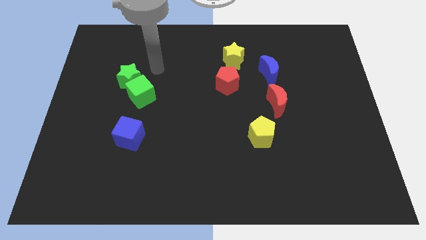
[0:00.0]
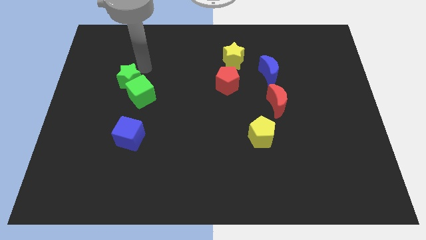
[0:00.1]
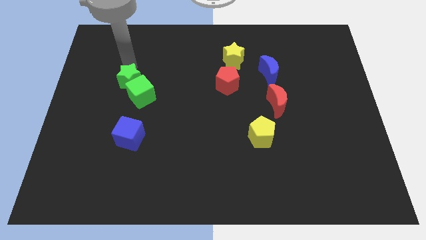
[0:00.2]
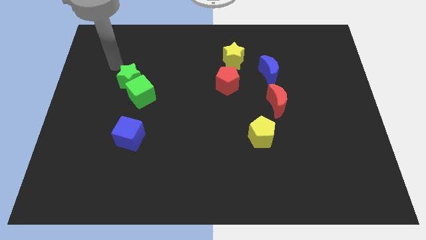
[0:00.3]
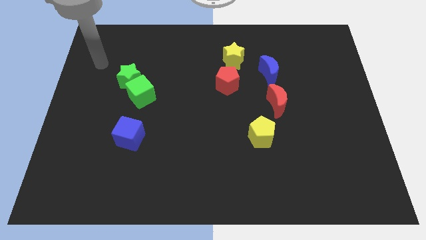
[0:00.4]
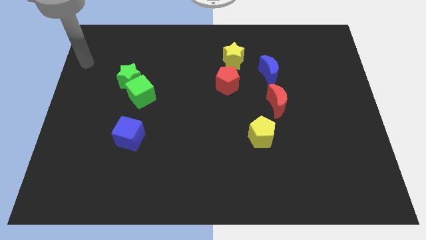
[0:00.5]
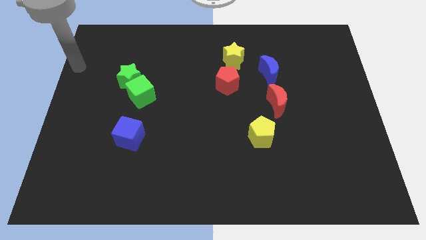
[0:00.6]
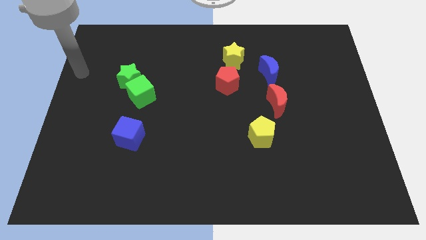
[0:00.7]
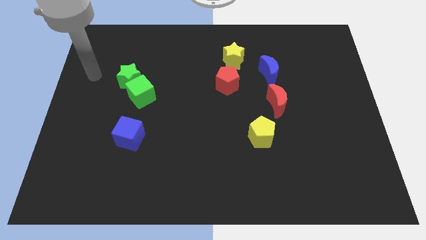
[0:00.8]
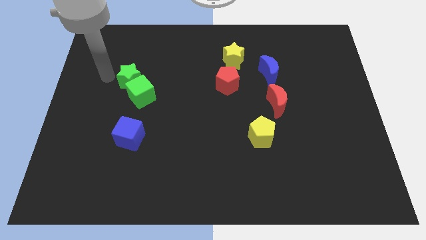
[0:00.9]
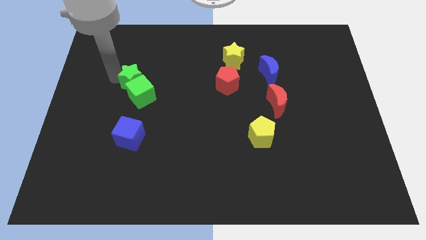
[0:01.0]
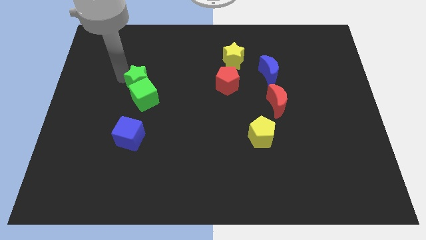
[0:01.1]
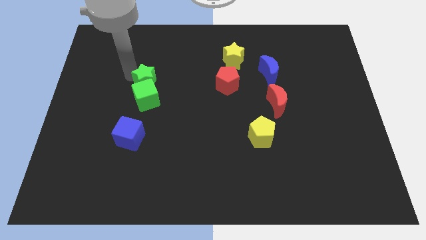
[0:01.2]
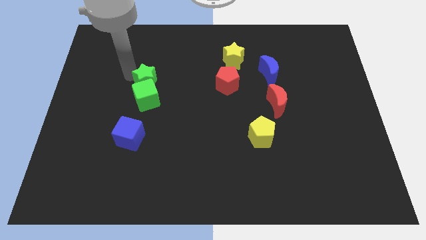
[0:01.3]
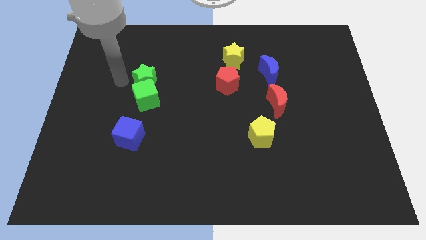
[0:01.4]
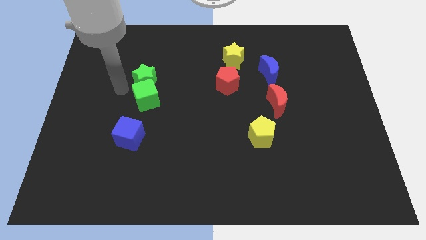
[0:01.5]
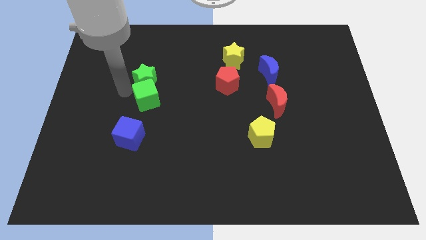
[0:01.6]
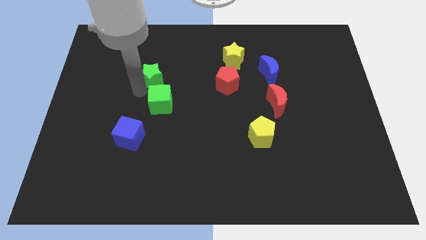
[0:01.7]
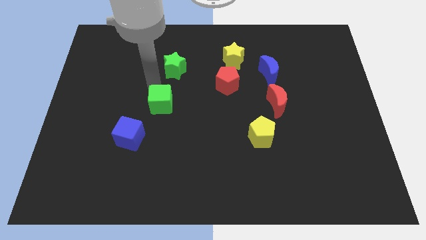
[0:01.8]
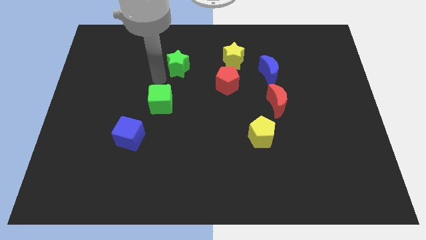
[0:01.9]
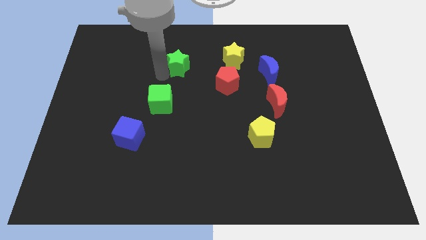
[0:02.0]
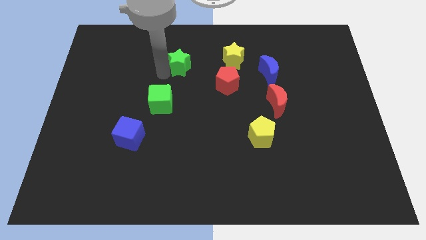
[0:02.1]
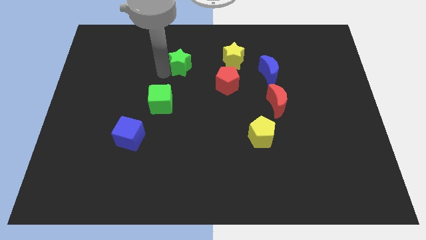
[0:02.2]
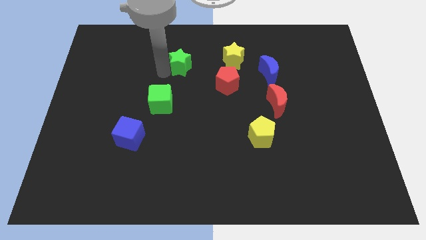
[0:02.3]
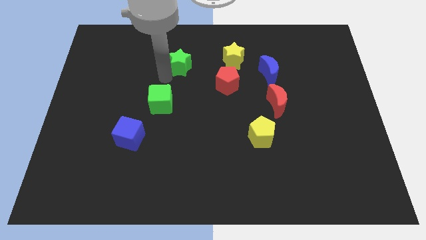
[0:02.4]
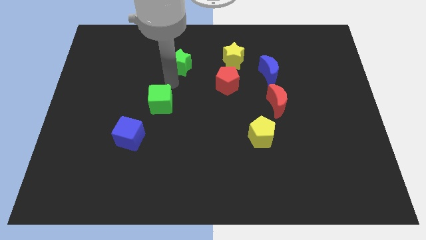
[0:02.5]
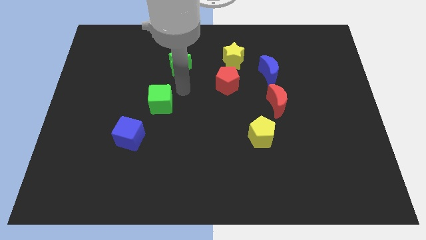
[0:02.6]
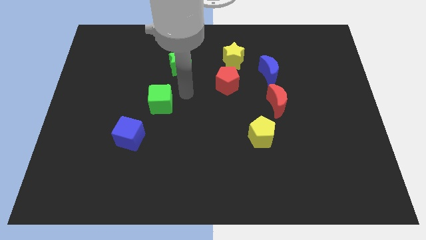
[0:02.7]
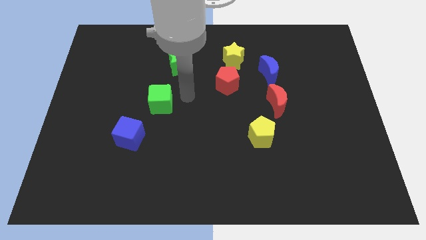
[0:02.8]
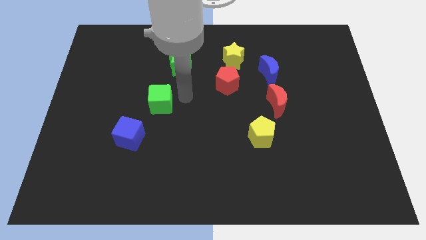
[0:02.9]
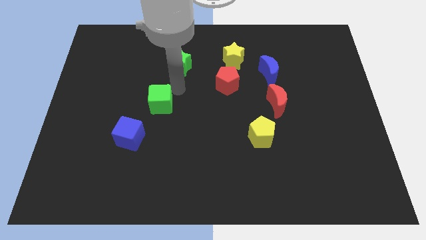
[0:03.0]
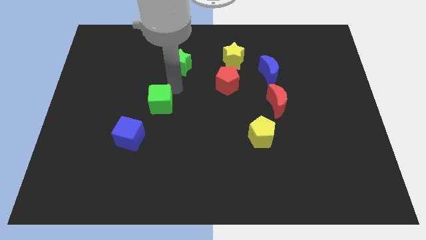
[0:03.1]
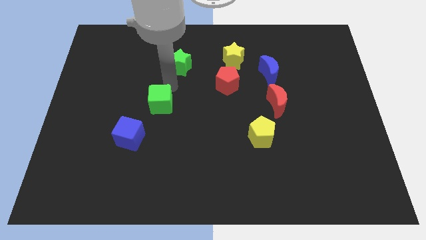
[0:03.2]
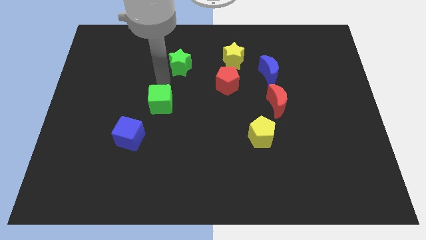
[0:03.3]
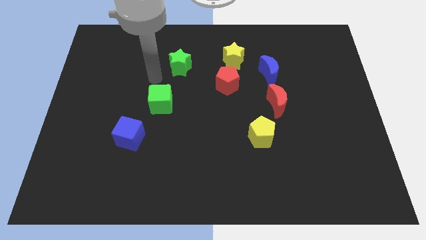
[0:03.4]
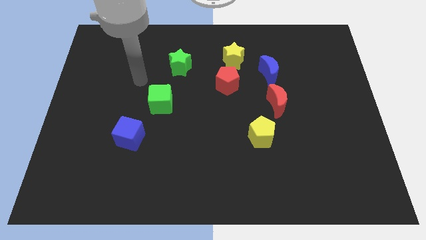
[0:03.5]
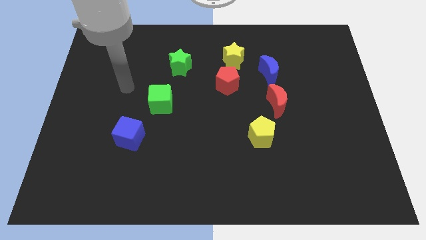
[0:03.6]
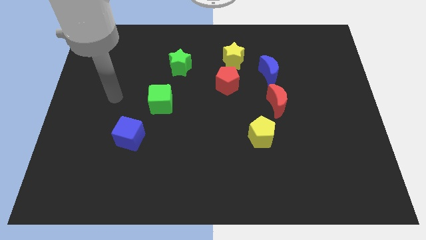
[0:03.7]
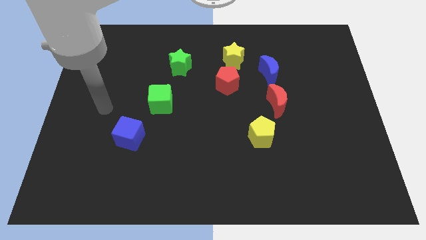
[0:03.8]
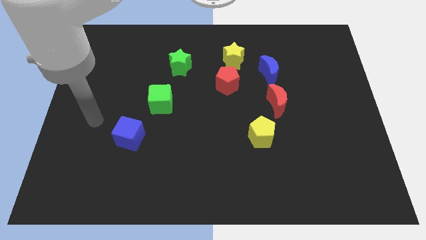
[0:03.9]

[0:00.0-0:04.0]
move the green star diagonally top right to the green cube

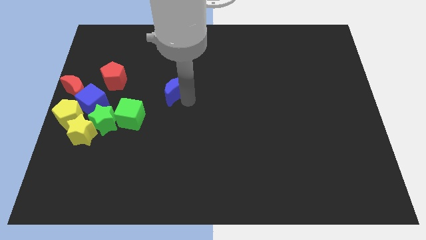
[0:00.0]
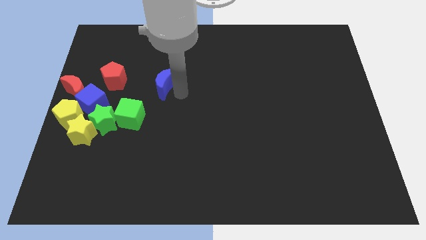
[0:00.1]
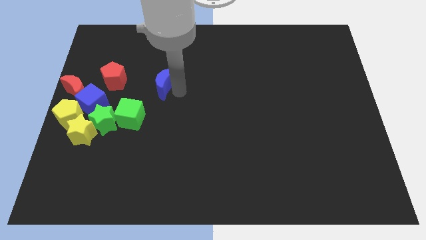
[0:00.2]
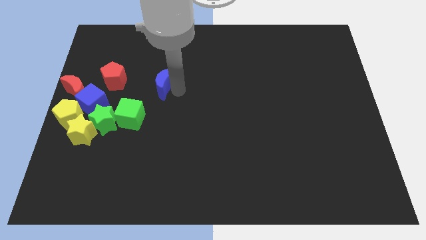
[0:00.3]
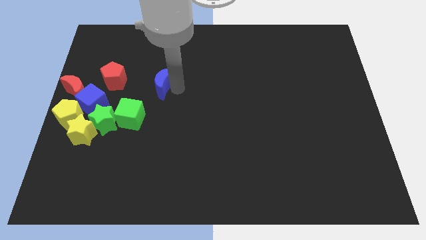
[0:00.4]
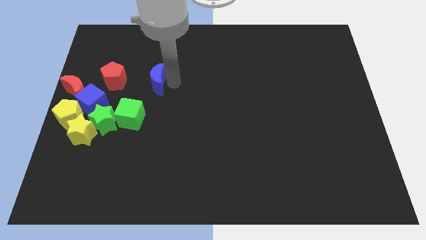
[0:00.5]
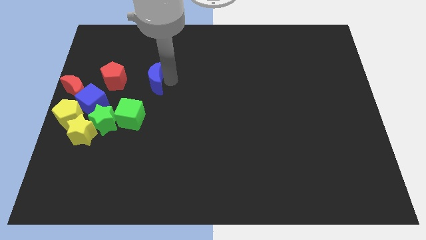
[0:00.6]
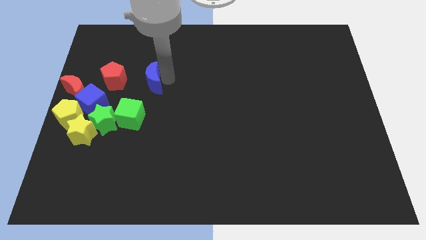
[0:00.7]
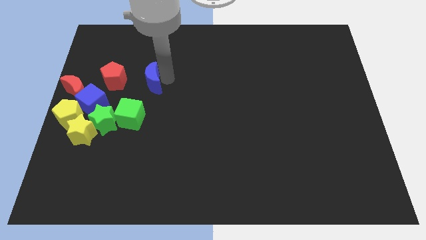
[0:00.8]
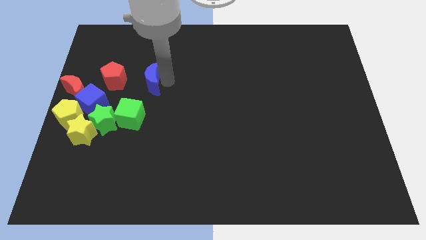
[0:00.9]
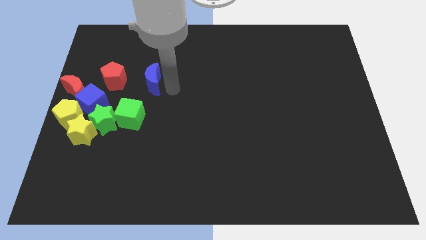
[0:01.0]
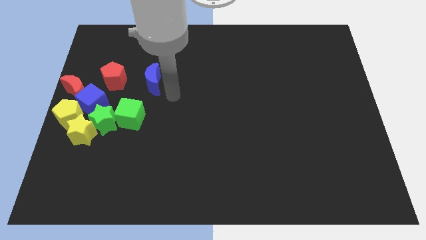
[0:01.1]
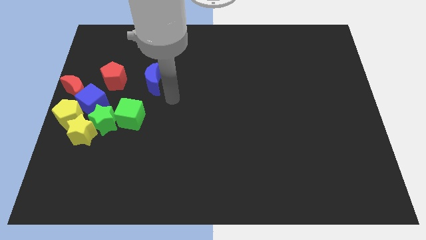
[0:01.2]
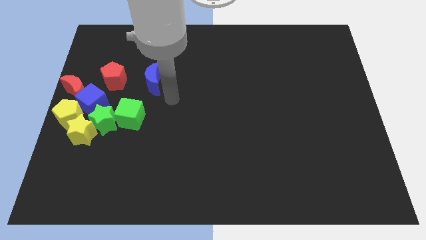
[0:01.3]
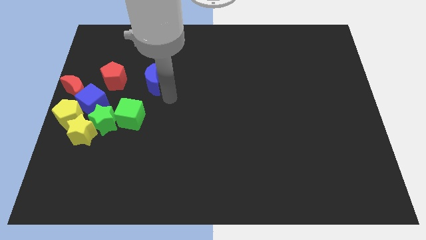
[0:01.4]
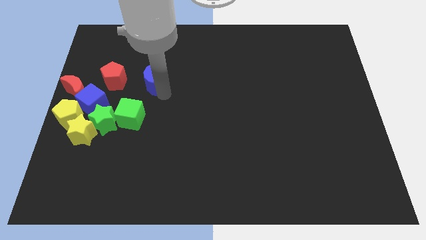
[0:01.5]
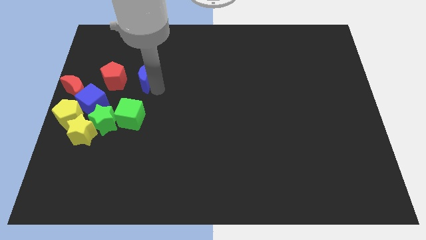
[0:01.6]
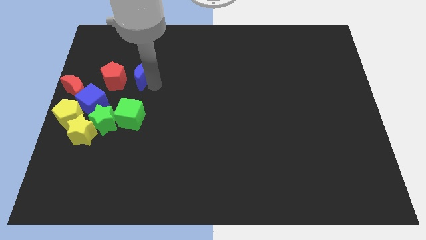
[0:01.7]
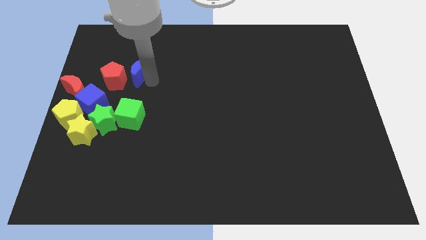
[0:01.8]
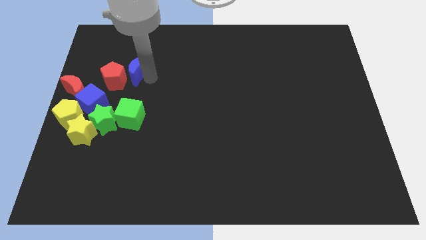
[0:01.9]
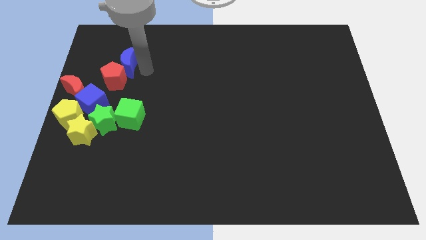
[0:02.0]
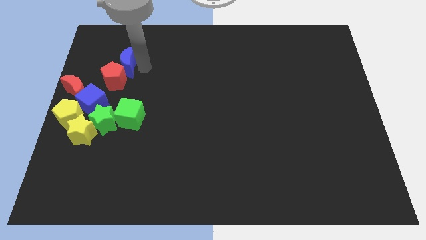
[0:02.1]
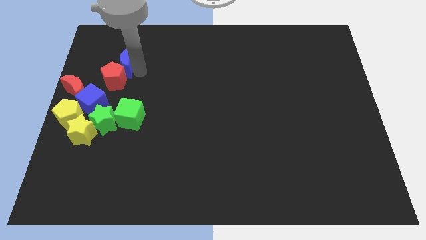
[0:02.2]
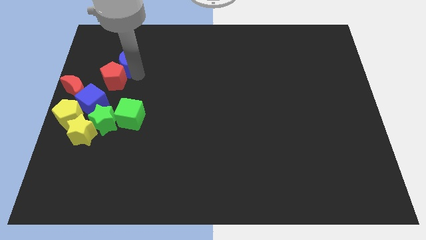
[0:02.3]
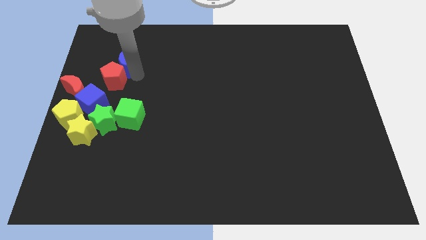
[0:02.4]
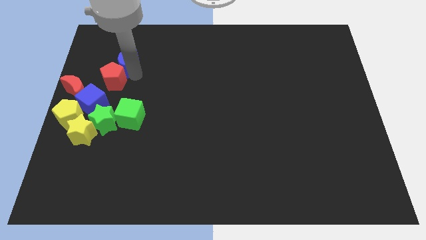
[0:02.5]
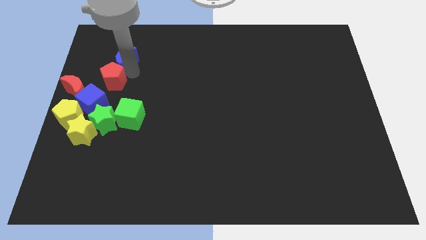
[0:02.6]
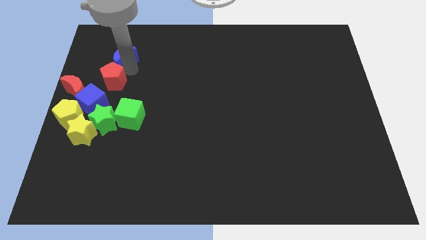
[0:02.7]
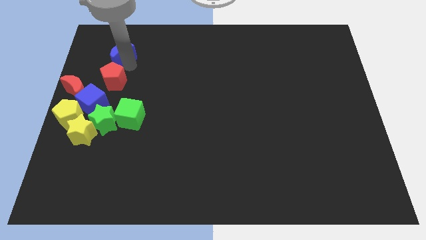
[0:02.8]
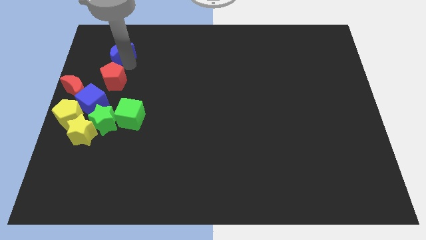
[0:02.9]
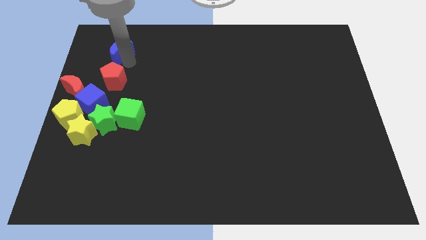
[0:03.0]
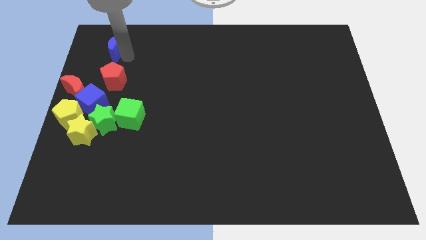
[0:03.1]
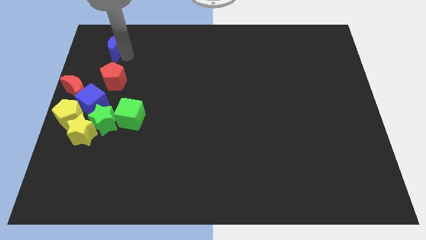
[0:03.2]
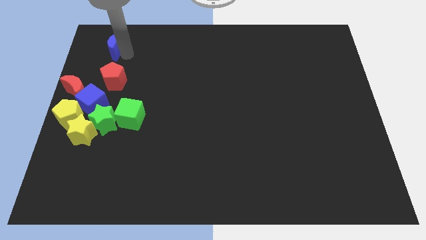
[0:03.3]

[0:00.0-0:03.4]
slide the blue crescent above the top side of the red pentagon

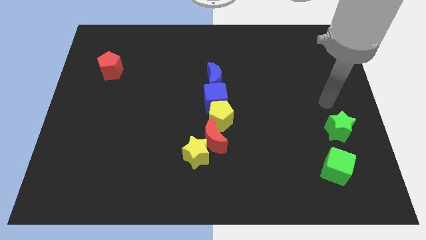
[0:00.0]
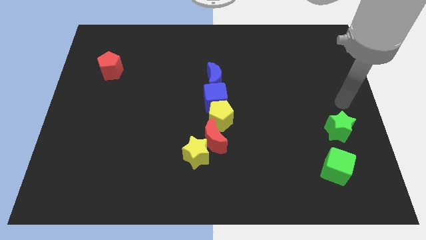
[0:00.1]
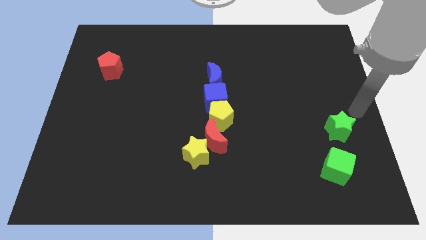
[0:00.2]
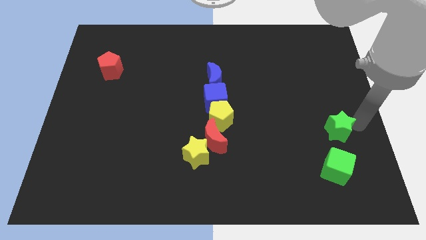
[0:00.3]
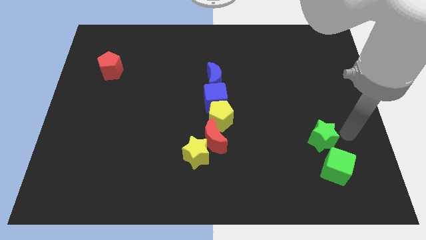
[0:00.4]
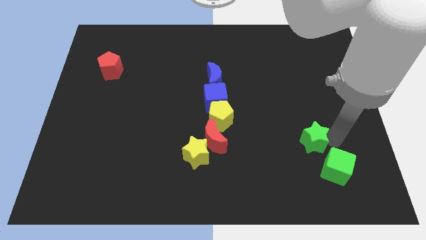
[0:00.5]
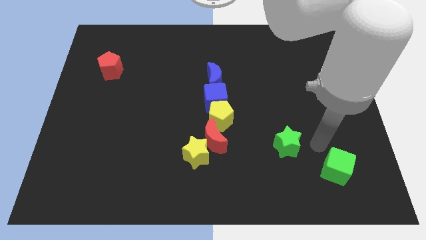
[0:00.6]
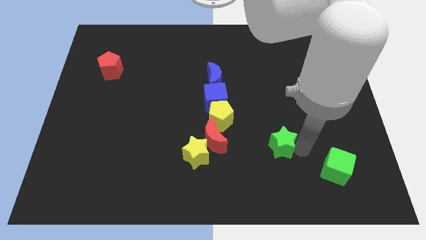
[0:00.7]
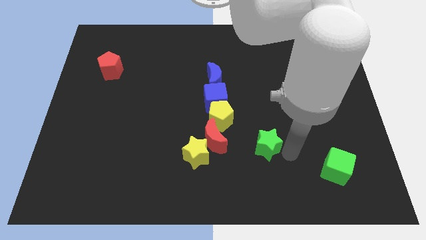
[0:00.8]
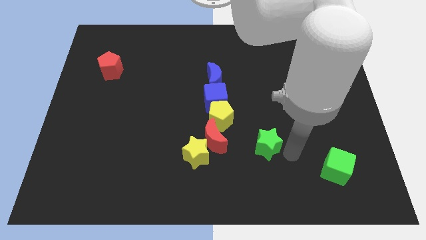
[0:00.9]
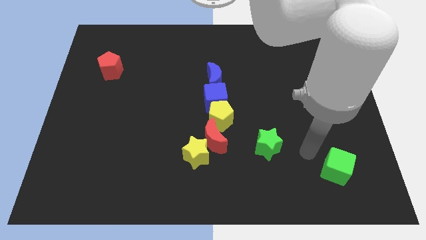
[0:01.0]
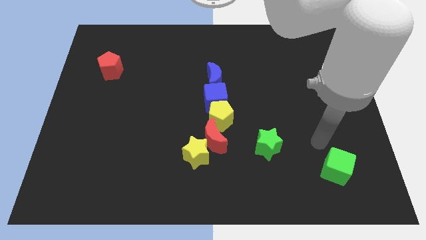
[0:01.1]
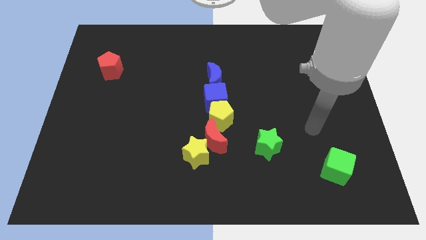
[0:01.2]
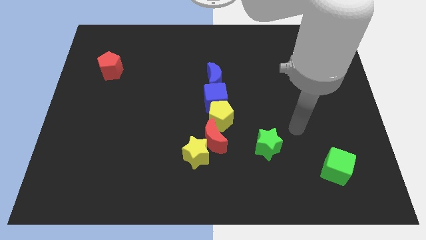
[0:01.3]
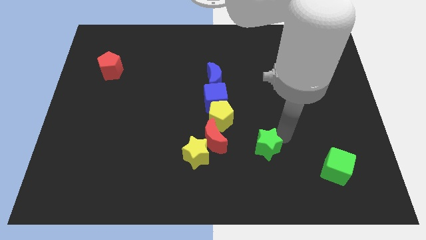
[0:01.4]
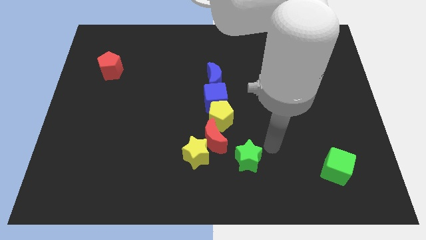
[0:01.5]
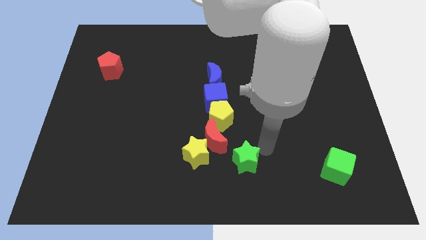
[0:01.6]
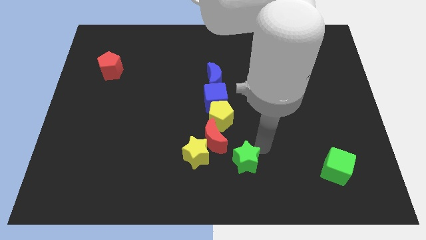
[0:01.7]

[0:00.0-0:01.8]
move the green star to the left of green cube
